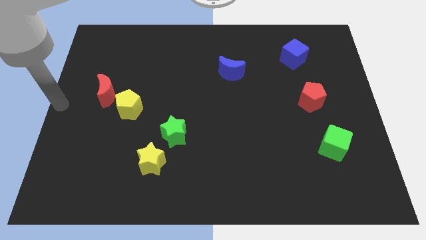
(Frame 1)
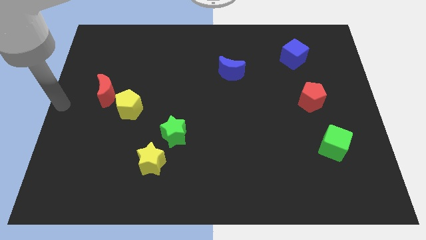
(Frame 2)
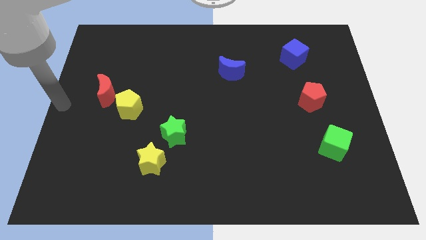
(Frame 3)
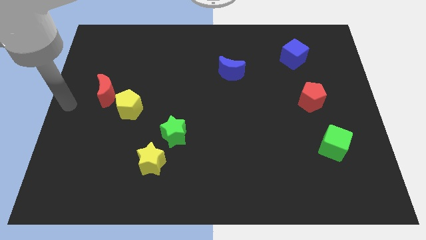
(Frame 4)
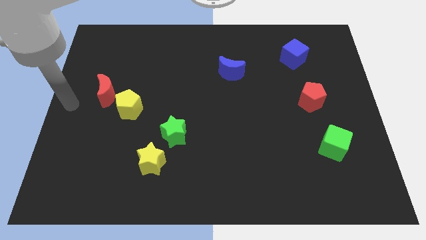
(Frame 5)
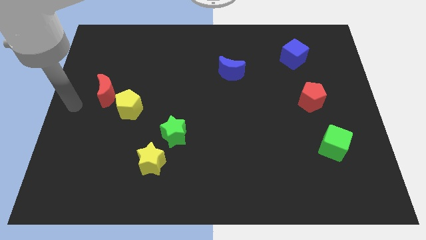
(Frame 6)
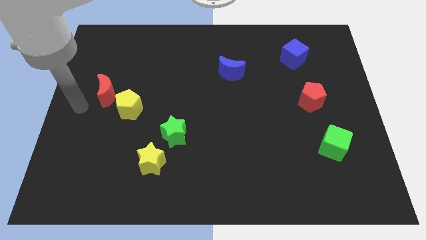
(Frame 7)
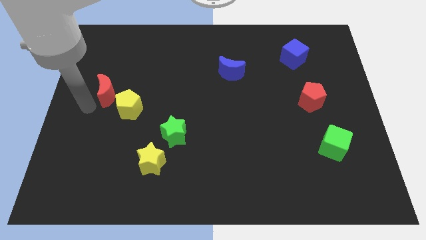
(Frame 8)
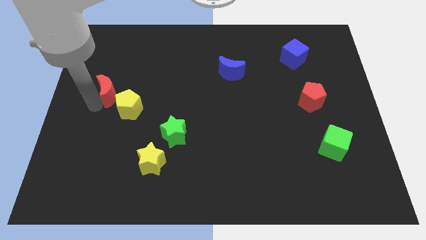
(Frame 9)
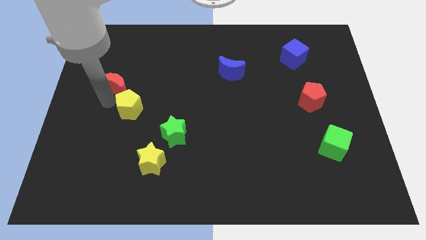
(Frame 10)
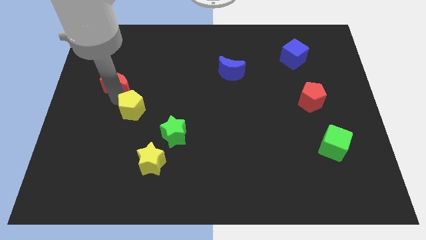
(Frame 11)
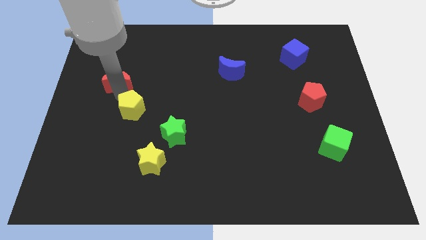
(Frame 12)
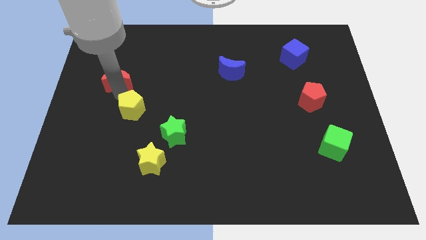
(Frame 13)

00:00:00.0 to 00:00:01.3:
push red crescent slightly upwards

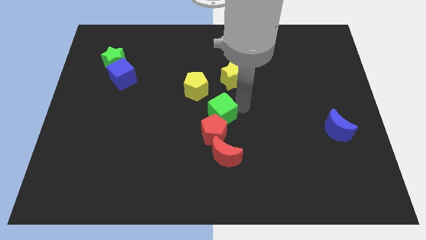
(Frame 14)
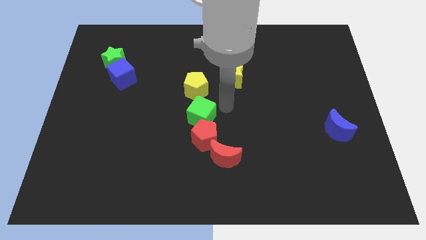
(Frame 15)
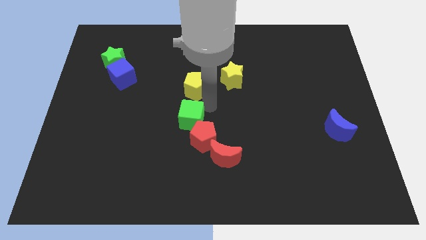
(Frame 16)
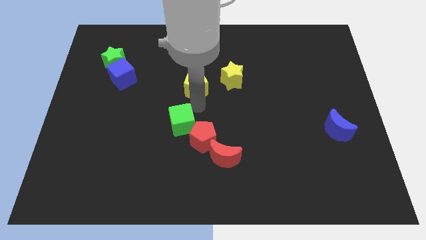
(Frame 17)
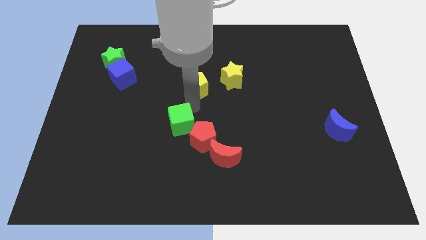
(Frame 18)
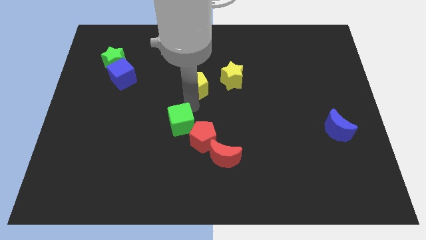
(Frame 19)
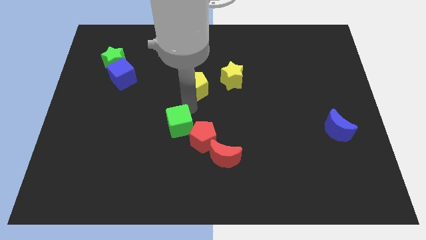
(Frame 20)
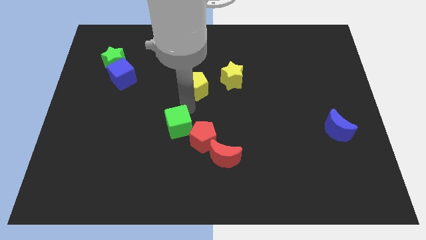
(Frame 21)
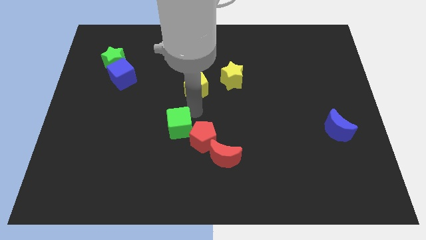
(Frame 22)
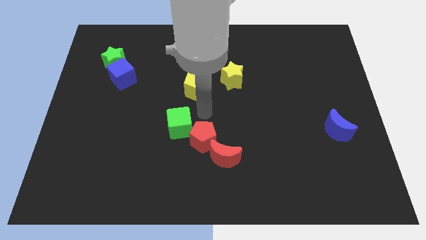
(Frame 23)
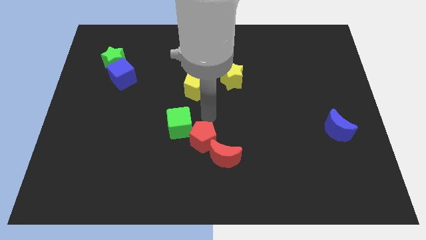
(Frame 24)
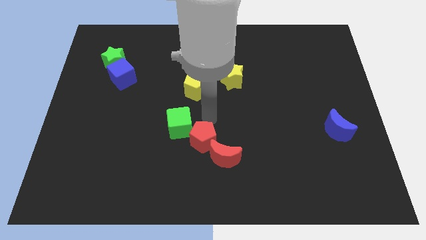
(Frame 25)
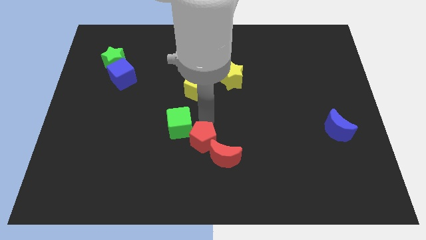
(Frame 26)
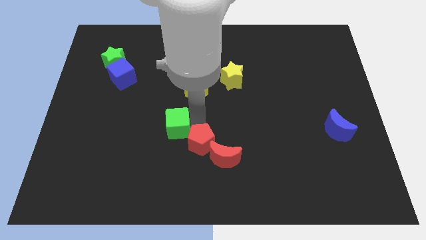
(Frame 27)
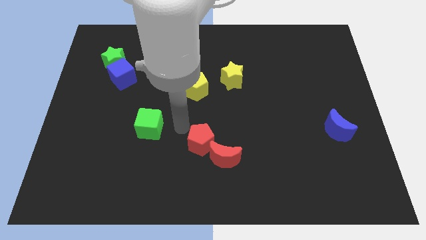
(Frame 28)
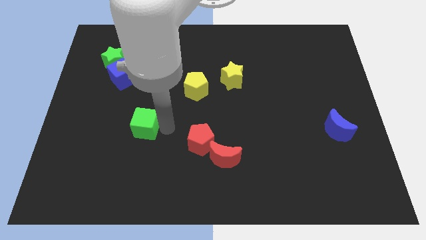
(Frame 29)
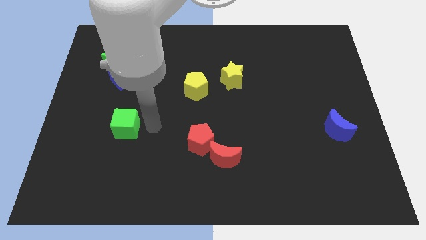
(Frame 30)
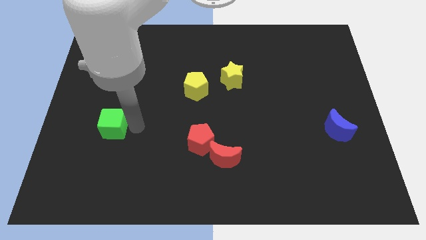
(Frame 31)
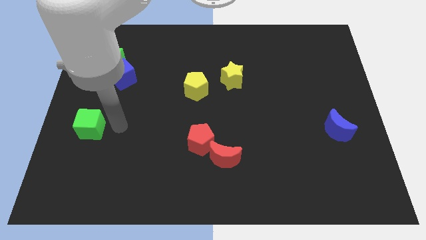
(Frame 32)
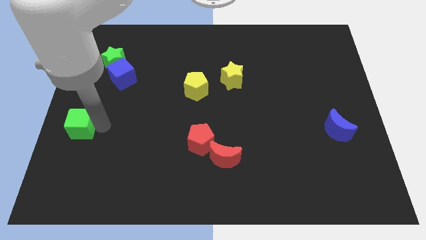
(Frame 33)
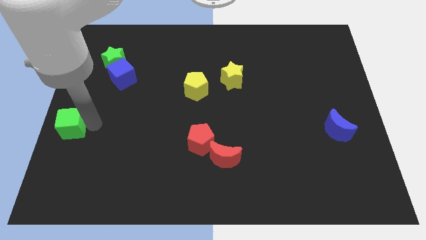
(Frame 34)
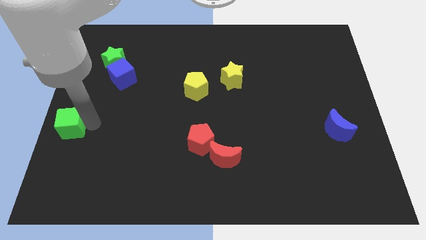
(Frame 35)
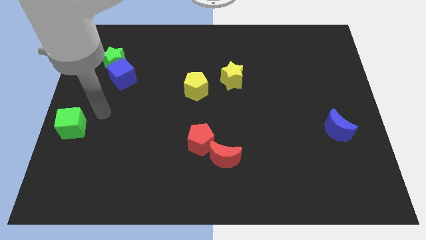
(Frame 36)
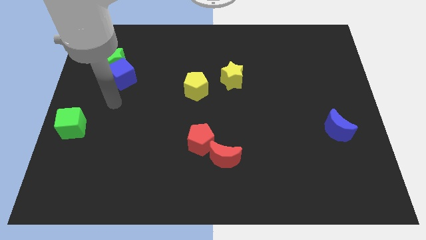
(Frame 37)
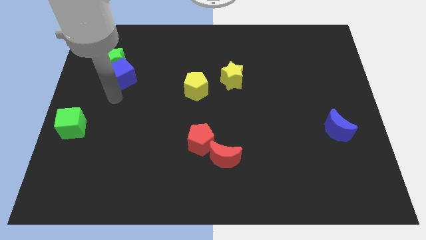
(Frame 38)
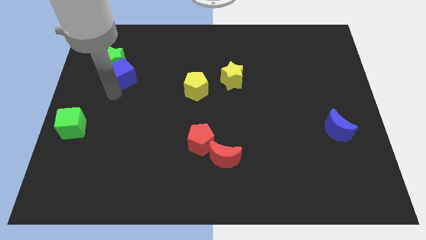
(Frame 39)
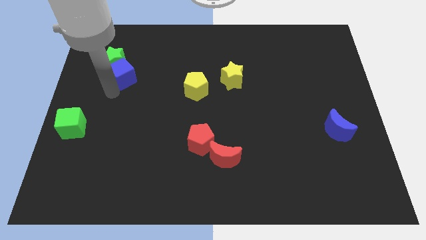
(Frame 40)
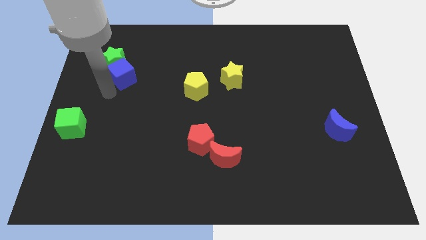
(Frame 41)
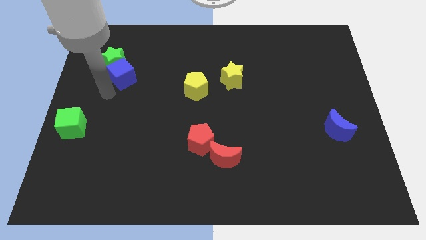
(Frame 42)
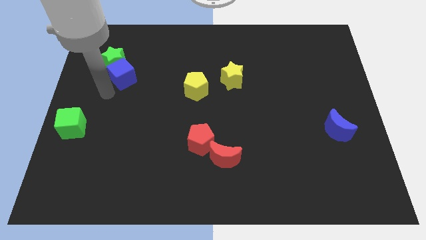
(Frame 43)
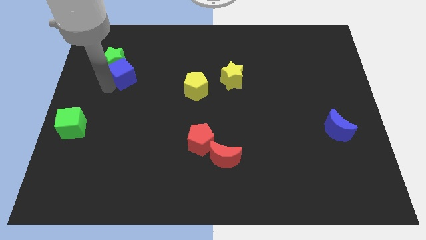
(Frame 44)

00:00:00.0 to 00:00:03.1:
push the green cube to the center left of the board

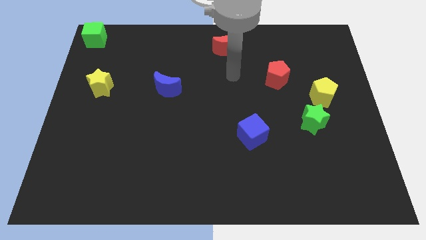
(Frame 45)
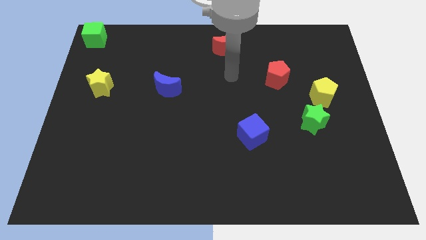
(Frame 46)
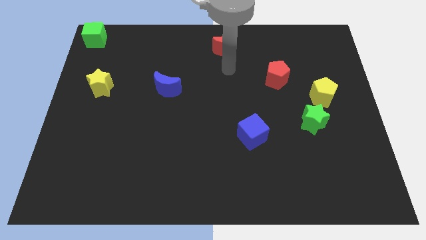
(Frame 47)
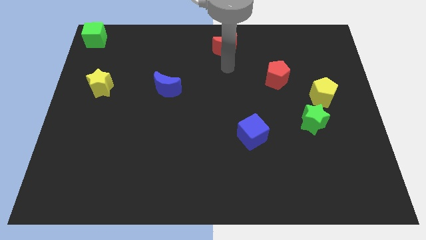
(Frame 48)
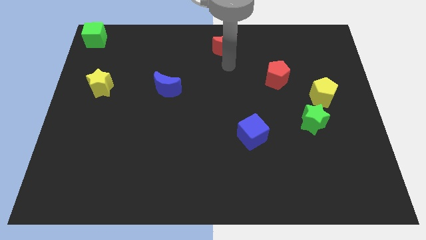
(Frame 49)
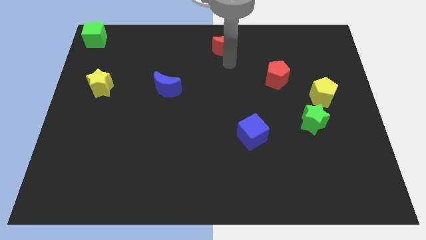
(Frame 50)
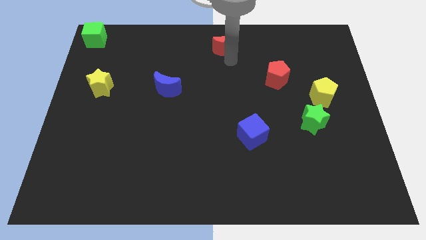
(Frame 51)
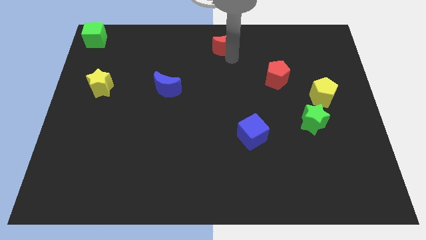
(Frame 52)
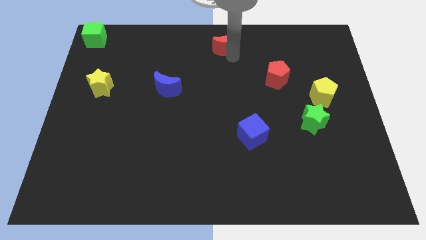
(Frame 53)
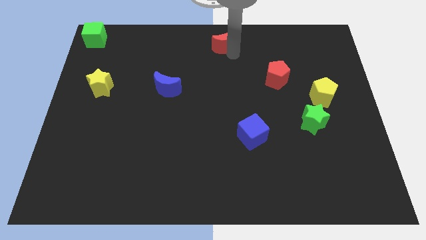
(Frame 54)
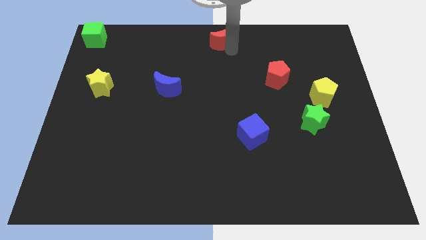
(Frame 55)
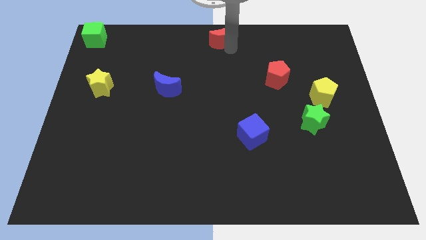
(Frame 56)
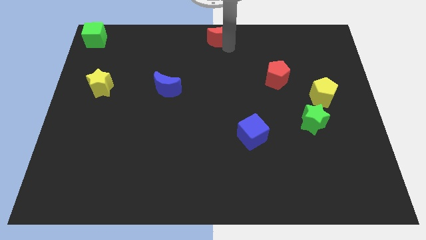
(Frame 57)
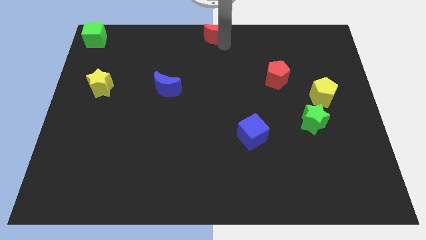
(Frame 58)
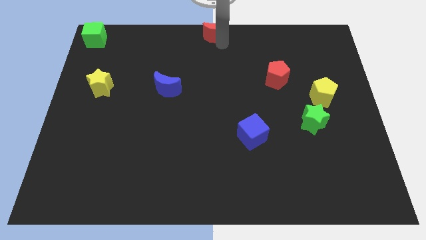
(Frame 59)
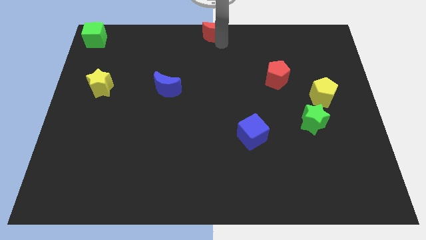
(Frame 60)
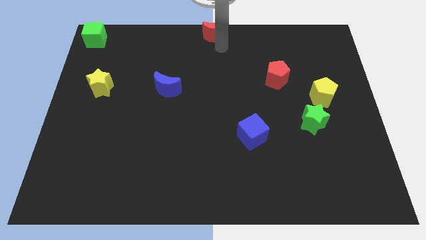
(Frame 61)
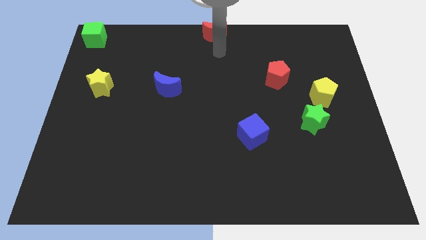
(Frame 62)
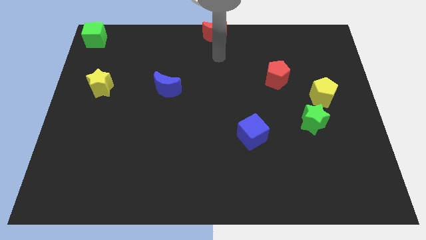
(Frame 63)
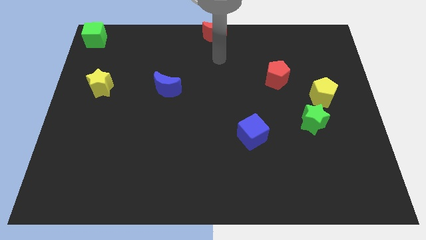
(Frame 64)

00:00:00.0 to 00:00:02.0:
place the red crescent at the top center

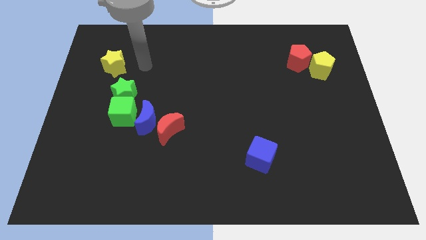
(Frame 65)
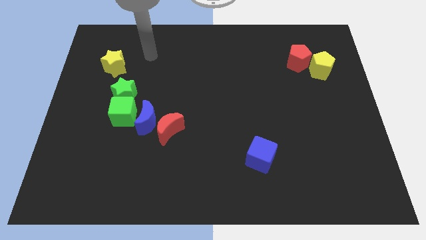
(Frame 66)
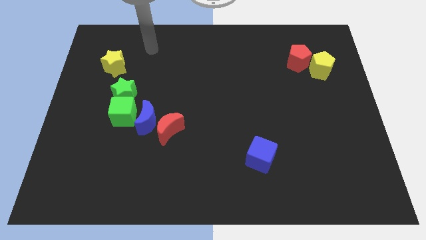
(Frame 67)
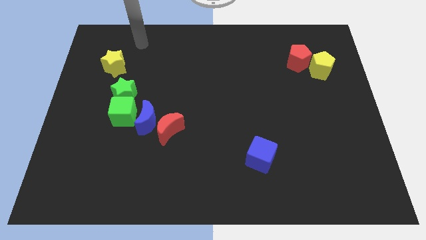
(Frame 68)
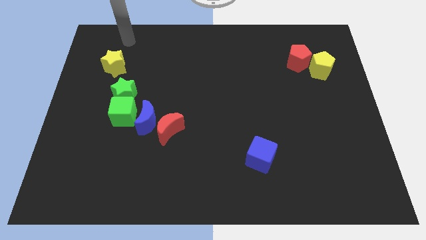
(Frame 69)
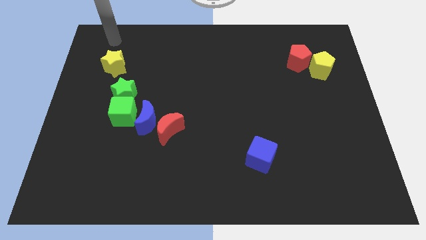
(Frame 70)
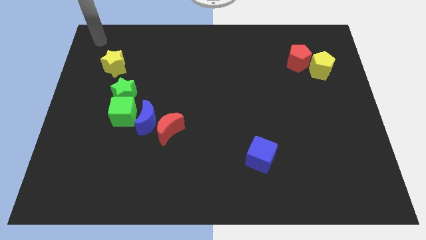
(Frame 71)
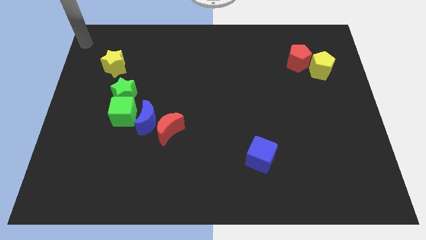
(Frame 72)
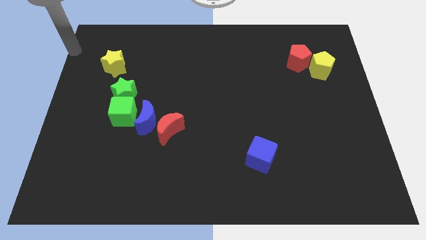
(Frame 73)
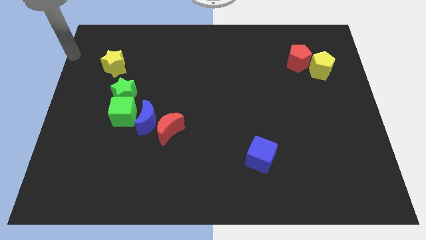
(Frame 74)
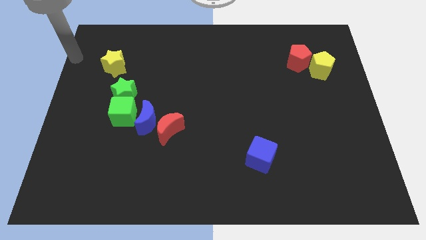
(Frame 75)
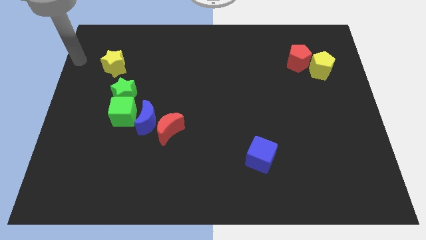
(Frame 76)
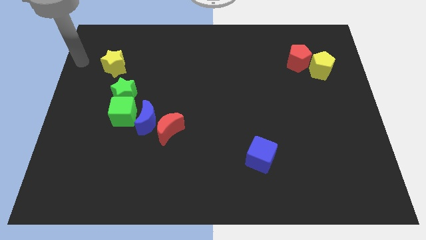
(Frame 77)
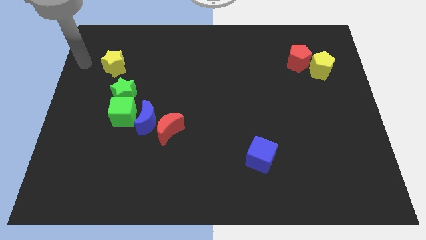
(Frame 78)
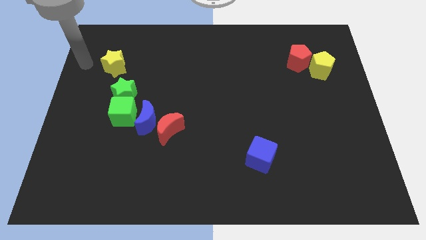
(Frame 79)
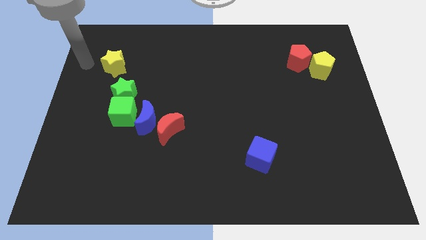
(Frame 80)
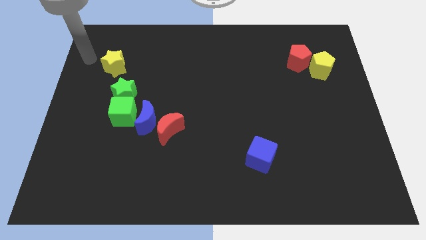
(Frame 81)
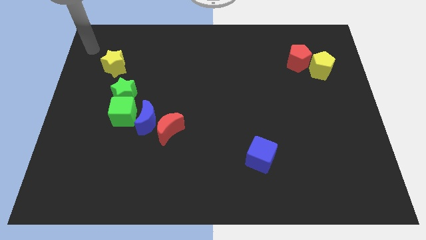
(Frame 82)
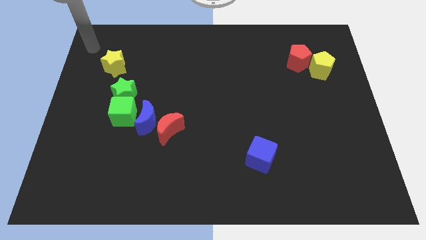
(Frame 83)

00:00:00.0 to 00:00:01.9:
move the arm towards the yellow star

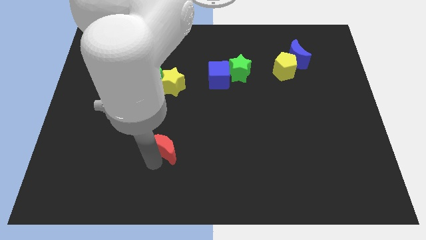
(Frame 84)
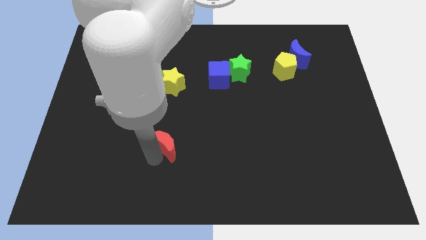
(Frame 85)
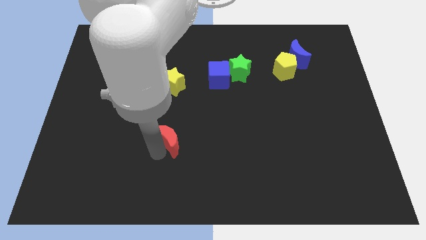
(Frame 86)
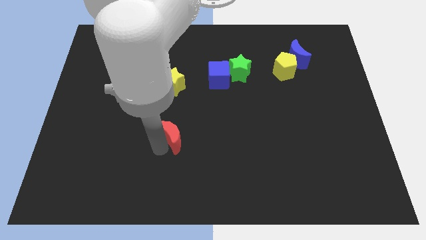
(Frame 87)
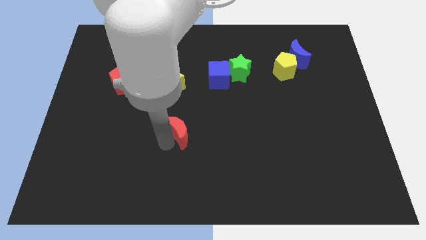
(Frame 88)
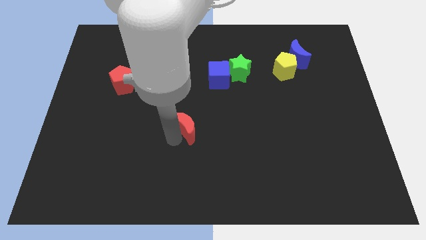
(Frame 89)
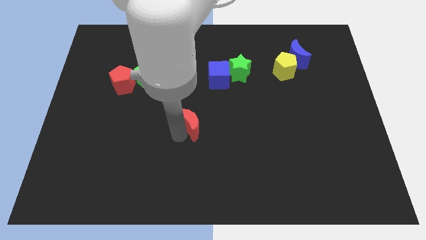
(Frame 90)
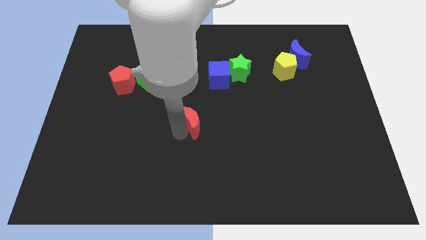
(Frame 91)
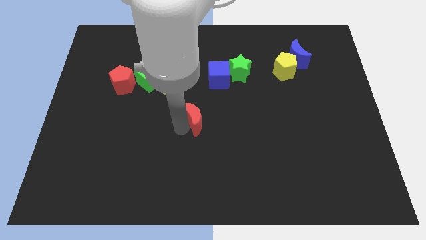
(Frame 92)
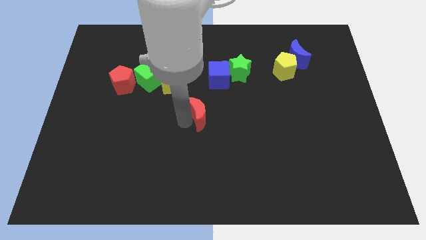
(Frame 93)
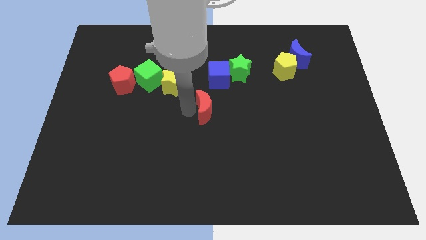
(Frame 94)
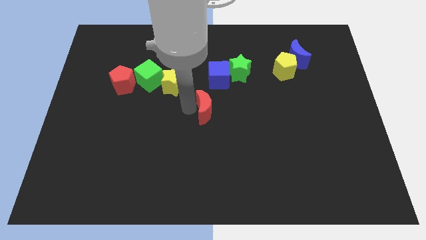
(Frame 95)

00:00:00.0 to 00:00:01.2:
slide the red crescent to the center of the board
